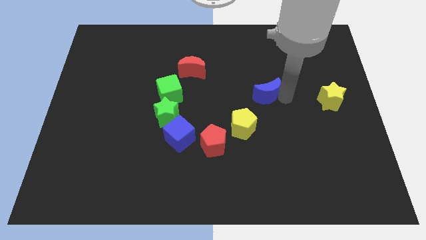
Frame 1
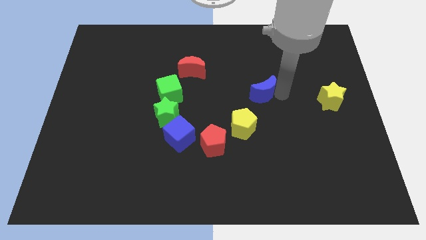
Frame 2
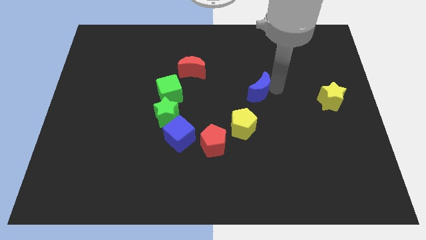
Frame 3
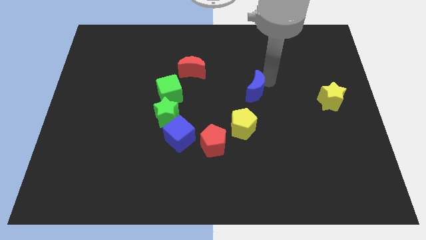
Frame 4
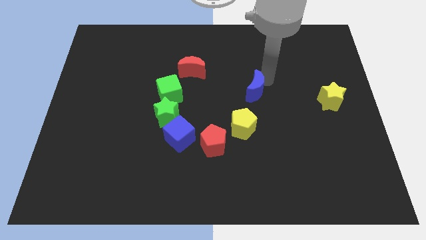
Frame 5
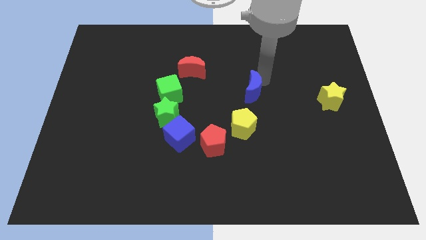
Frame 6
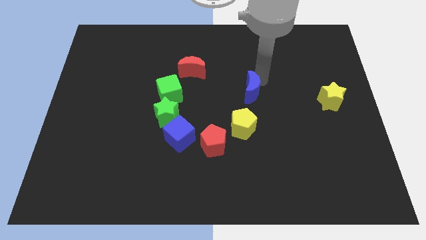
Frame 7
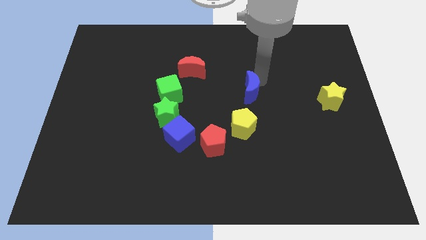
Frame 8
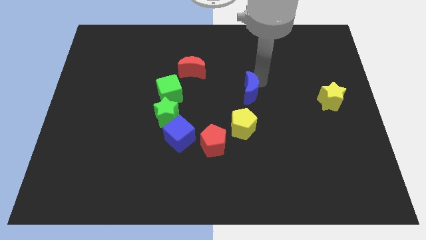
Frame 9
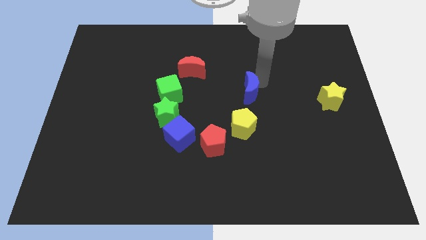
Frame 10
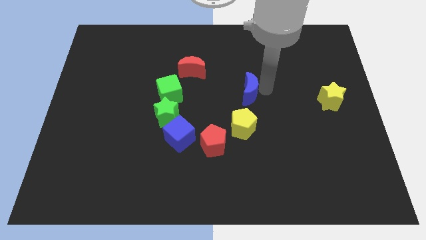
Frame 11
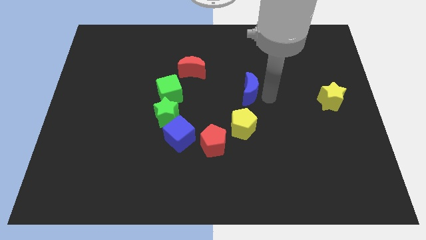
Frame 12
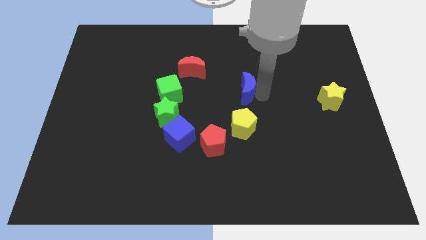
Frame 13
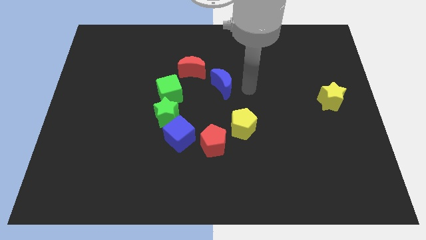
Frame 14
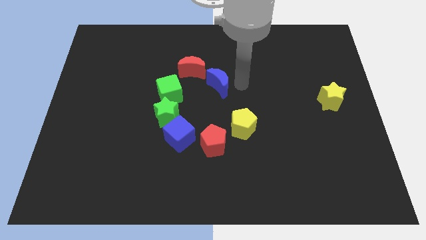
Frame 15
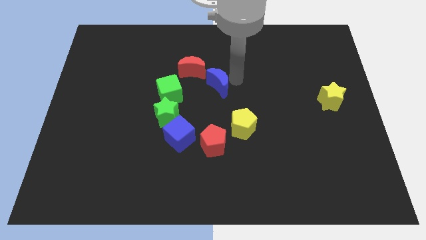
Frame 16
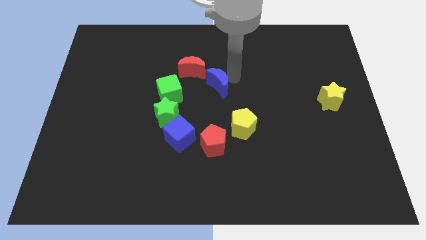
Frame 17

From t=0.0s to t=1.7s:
push the blue crescent diagonally to the bottom right of the red crescent

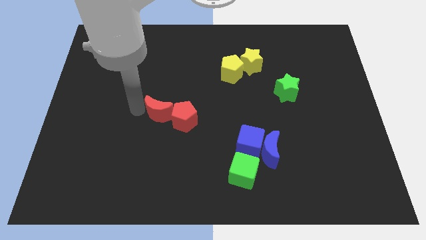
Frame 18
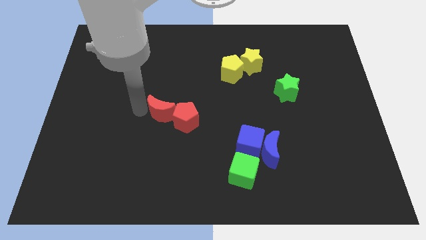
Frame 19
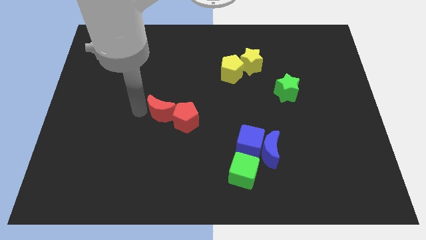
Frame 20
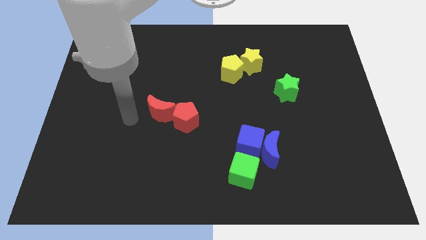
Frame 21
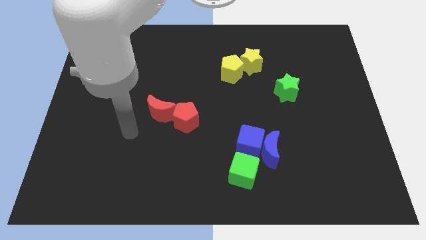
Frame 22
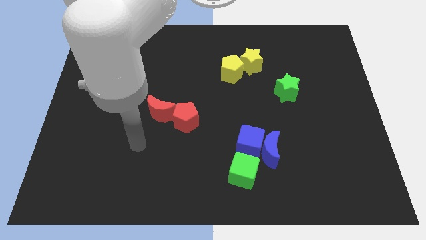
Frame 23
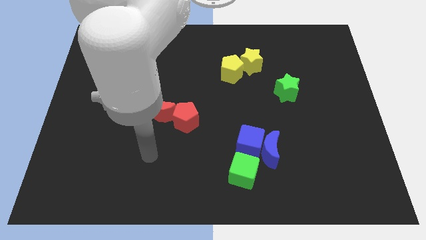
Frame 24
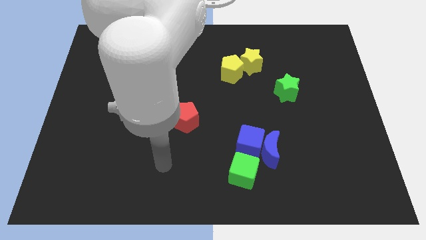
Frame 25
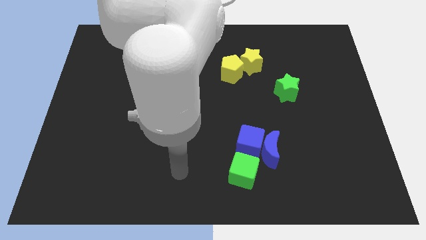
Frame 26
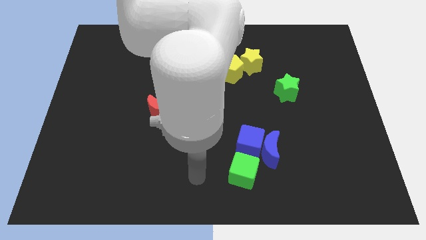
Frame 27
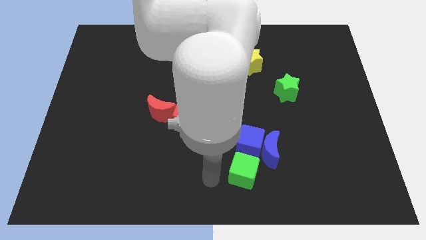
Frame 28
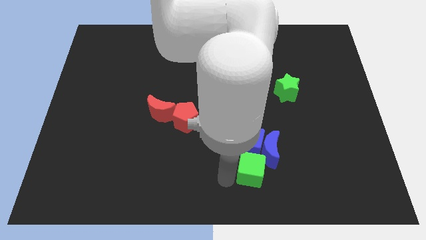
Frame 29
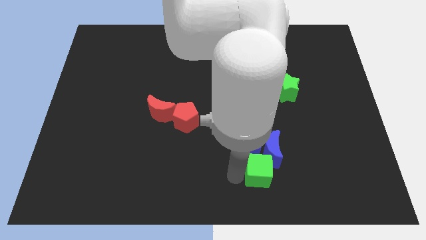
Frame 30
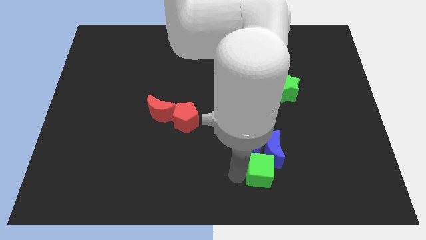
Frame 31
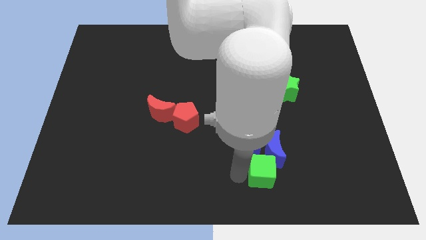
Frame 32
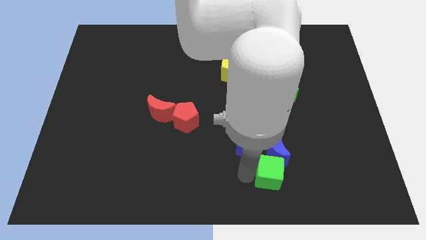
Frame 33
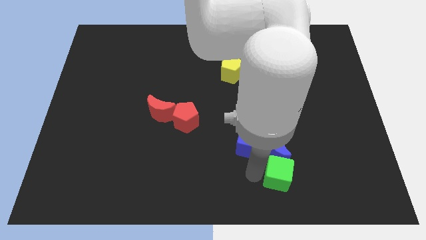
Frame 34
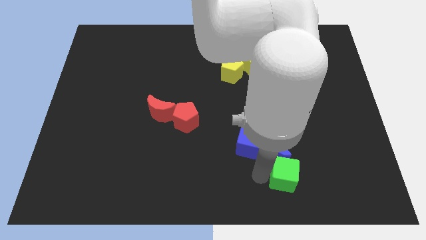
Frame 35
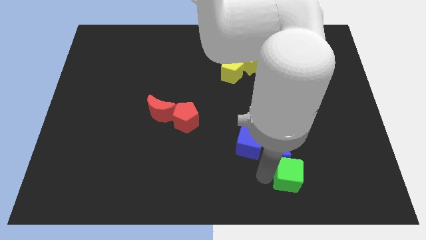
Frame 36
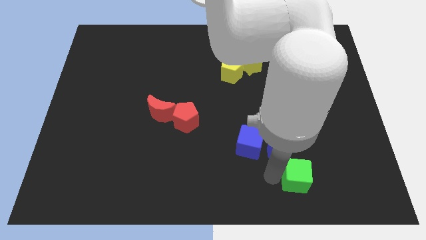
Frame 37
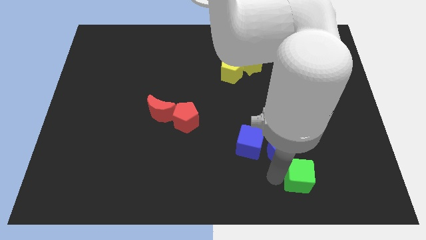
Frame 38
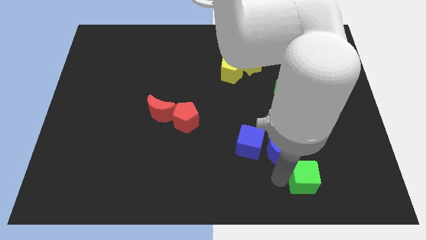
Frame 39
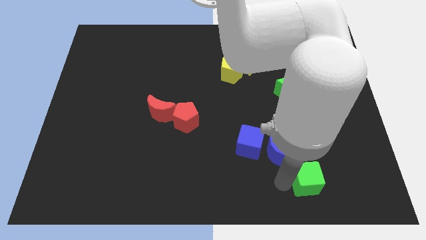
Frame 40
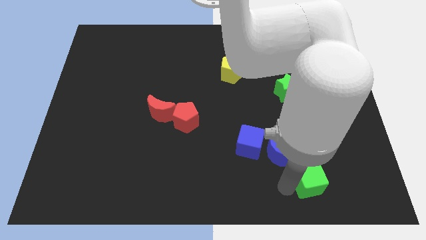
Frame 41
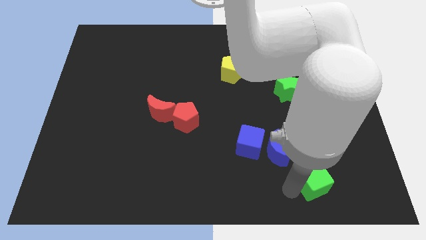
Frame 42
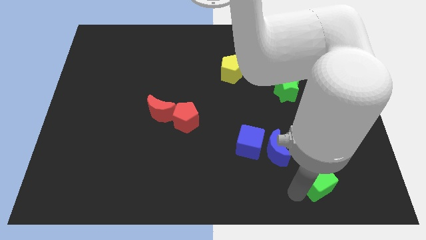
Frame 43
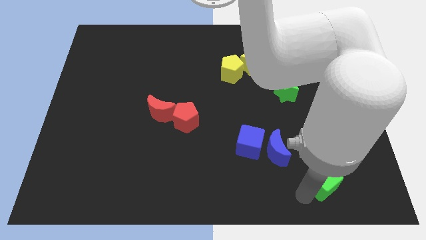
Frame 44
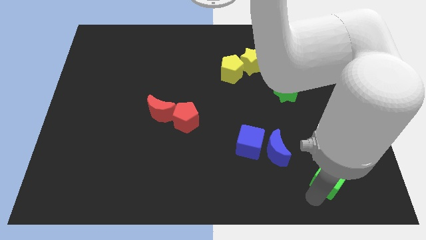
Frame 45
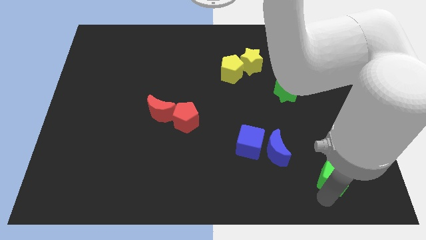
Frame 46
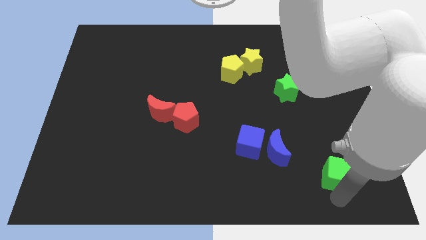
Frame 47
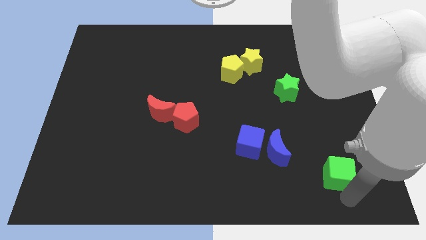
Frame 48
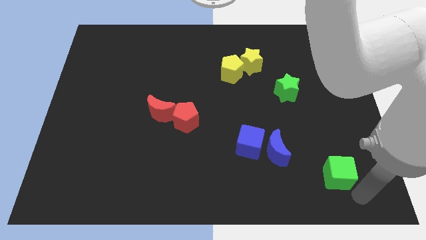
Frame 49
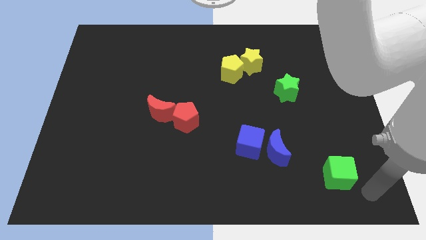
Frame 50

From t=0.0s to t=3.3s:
move the green cube away from the bottom side of the blue cube

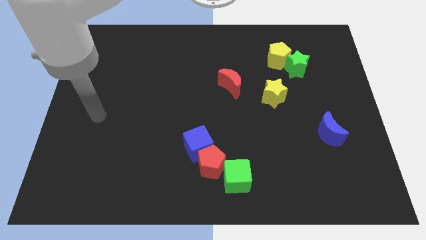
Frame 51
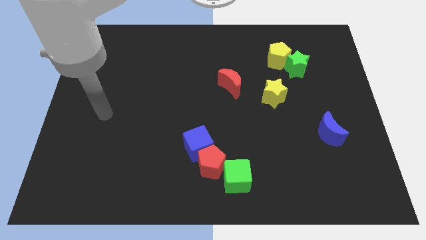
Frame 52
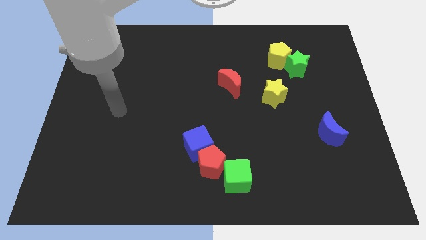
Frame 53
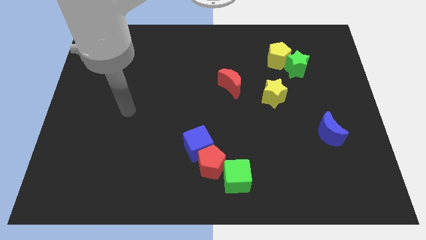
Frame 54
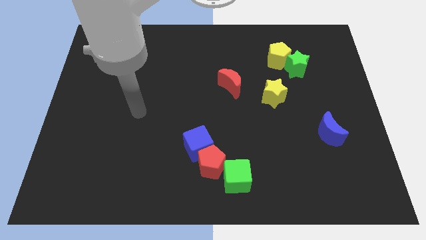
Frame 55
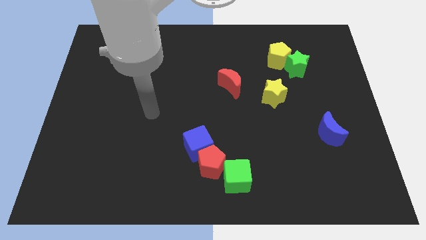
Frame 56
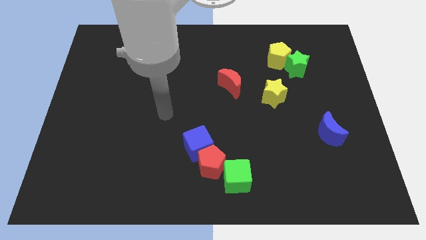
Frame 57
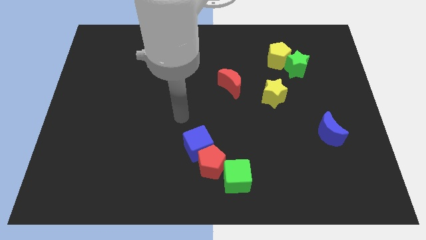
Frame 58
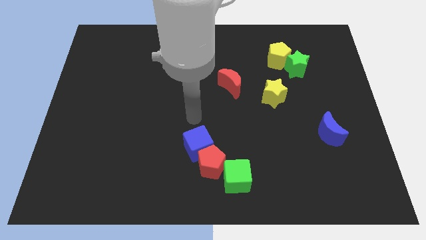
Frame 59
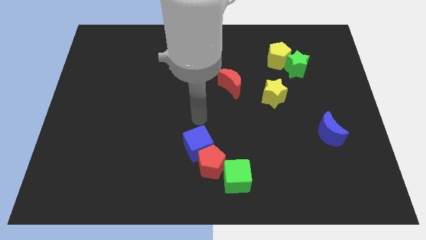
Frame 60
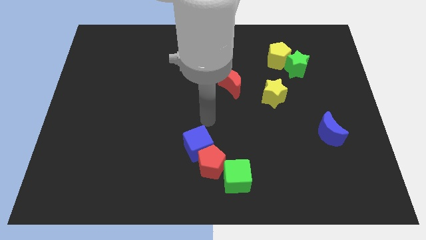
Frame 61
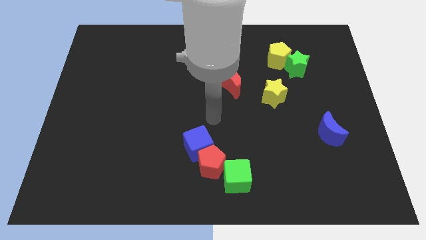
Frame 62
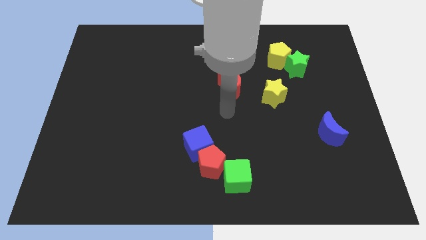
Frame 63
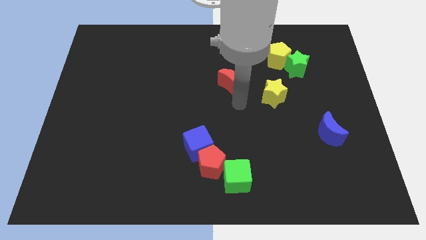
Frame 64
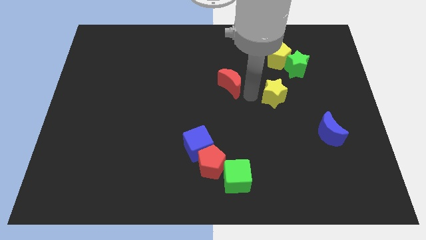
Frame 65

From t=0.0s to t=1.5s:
place your arm in between the yellow star and red moon

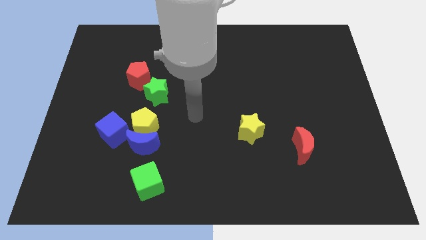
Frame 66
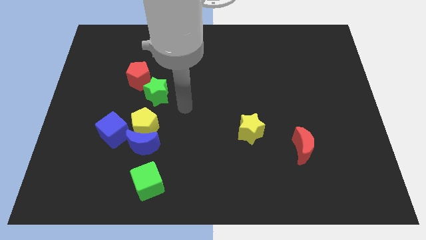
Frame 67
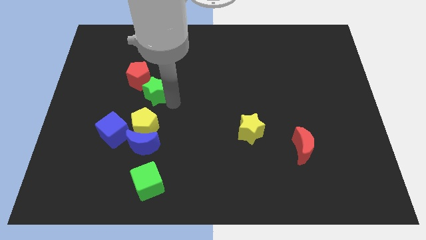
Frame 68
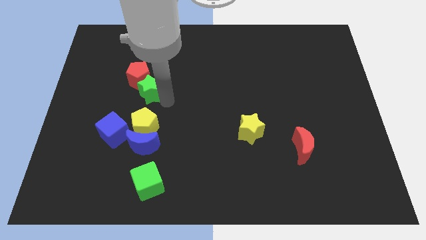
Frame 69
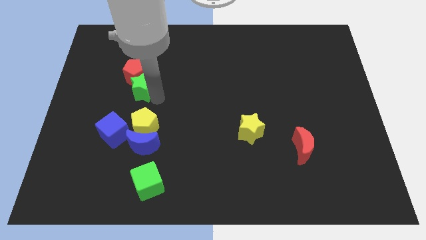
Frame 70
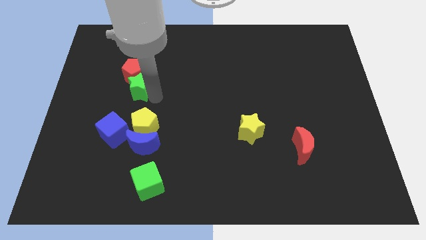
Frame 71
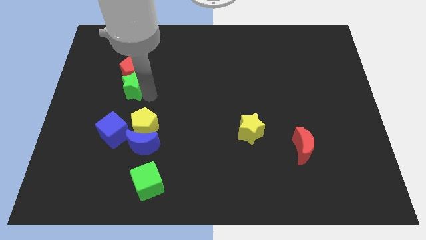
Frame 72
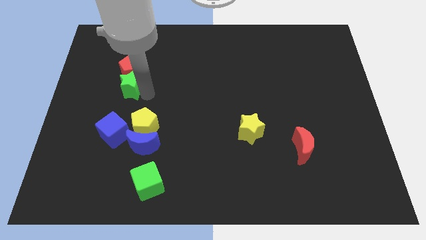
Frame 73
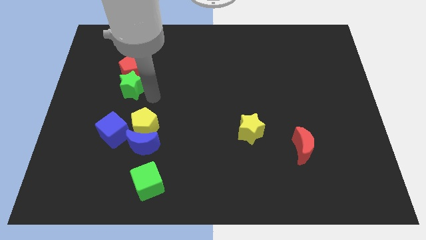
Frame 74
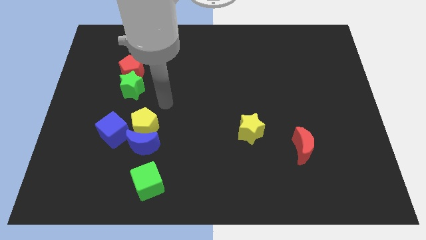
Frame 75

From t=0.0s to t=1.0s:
slide green star into red pentagon

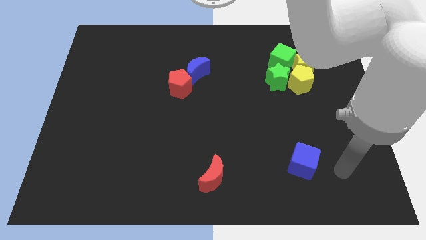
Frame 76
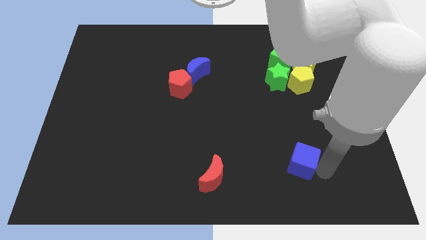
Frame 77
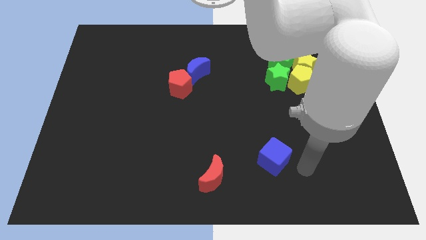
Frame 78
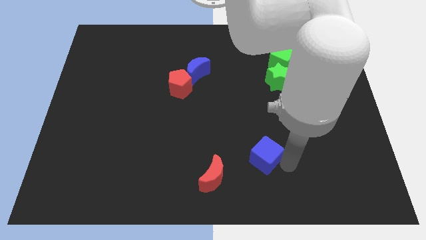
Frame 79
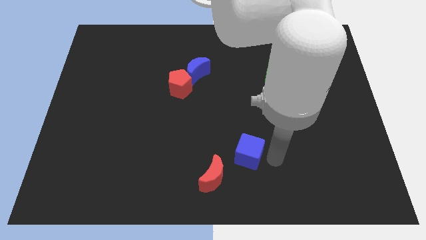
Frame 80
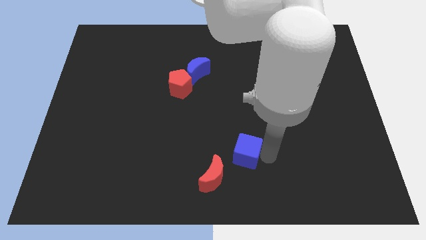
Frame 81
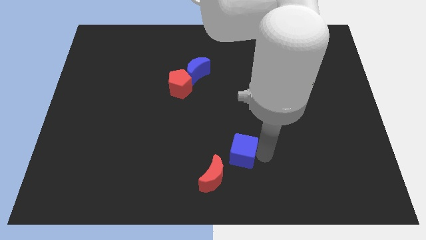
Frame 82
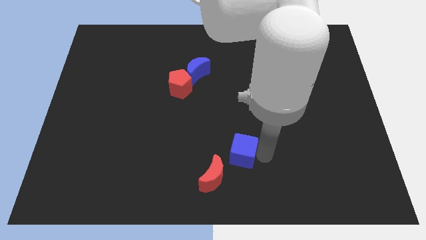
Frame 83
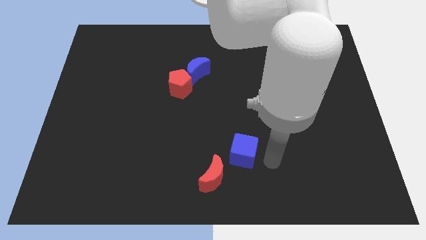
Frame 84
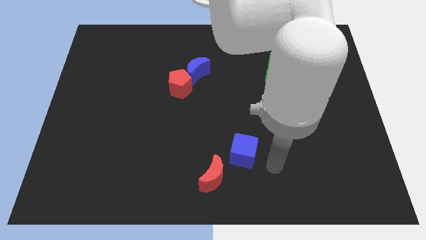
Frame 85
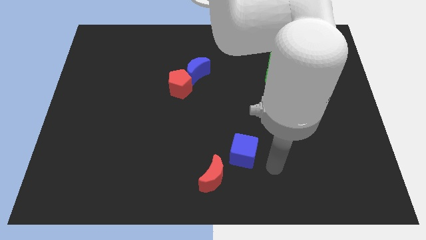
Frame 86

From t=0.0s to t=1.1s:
put the blue cube diagonally top right to the red moon

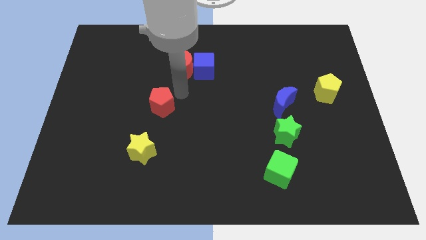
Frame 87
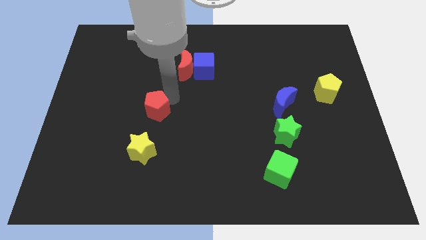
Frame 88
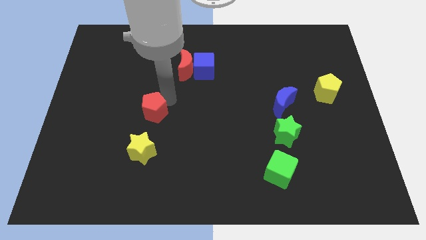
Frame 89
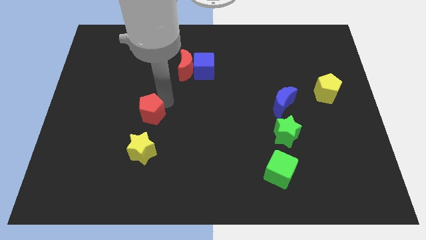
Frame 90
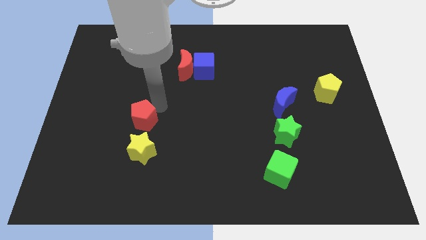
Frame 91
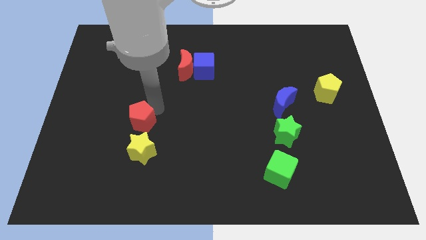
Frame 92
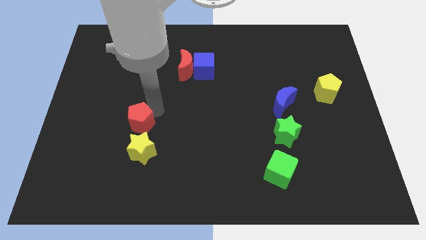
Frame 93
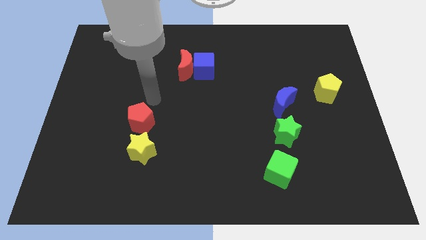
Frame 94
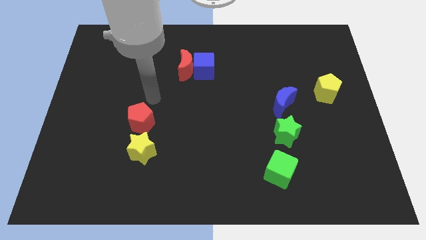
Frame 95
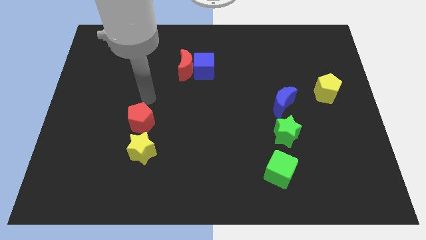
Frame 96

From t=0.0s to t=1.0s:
move the red pentagon close to the yellow star
